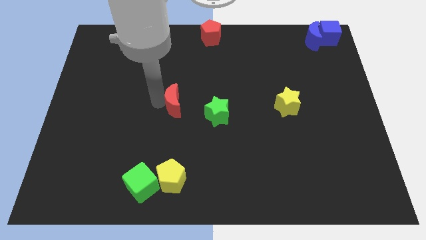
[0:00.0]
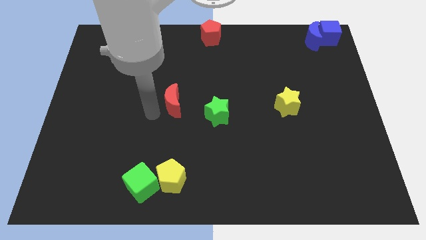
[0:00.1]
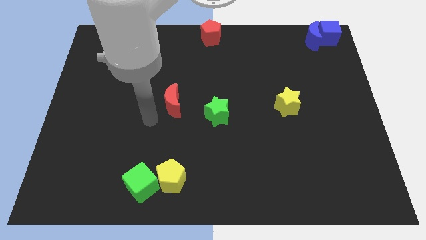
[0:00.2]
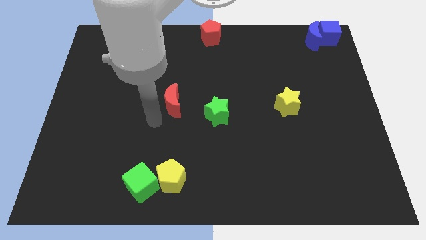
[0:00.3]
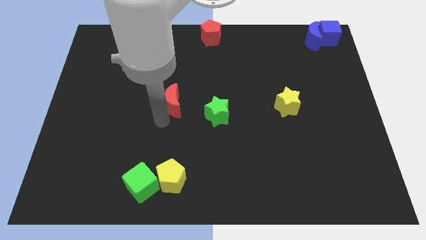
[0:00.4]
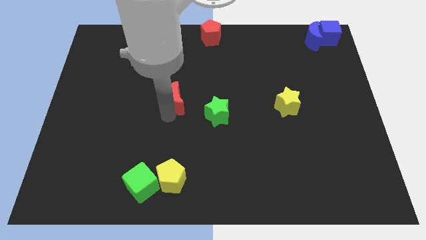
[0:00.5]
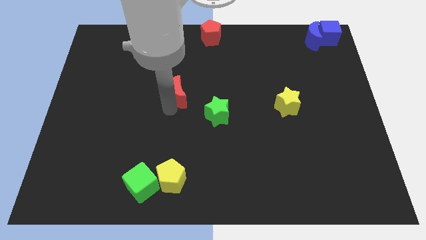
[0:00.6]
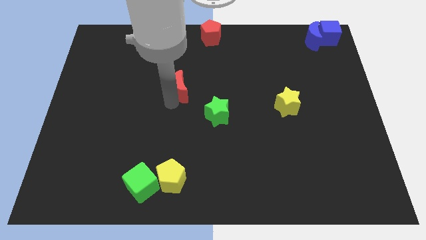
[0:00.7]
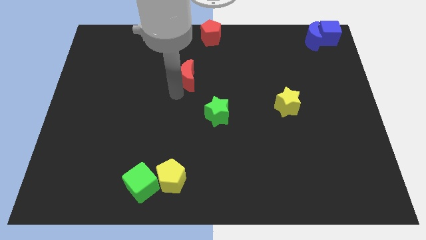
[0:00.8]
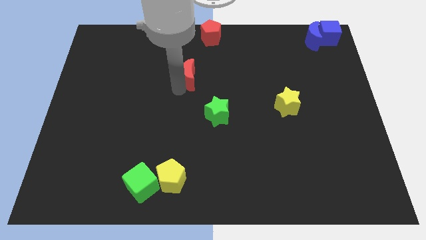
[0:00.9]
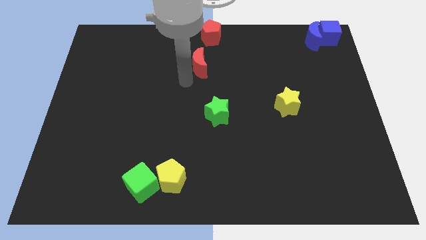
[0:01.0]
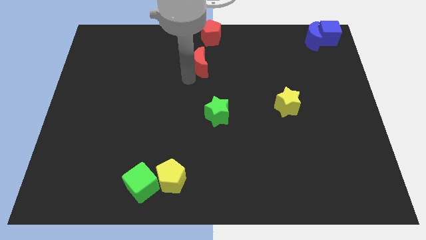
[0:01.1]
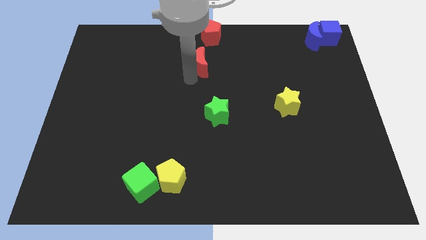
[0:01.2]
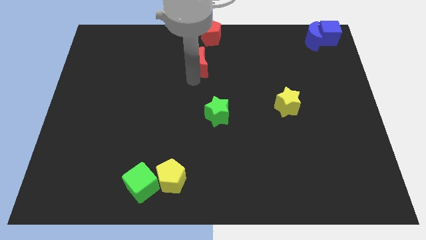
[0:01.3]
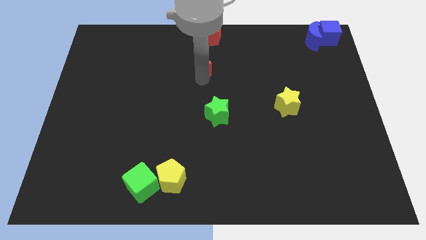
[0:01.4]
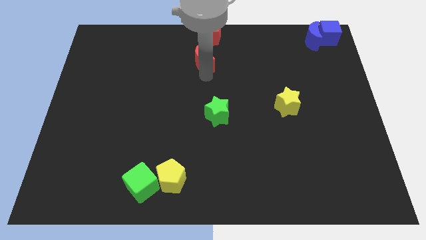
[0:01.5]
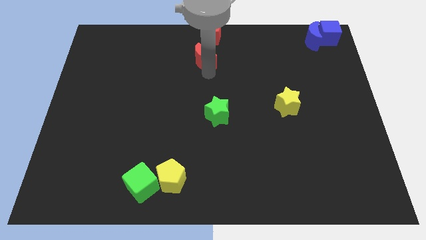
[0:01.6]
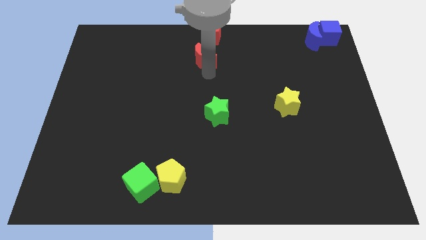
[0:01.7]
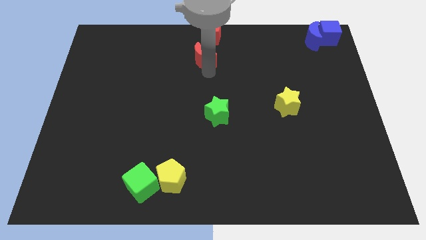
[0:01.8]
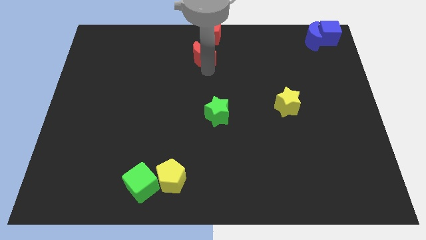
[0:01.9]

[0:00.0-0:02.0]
move the red crescent to the bottom of the red pentagon

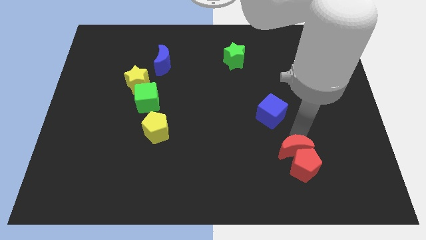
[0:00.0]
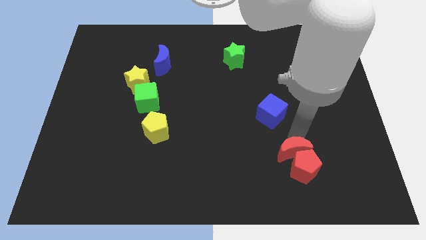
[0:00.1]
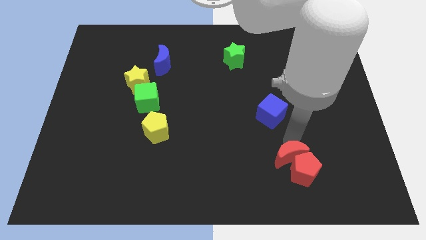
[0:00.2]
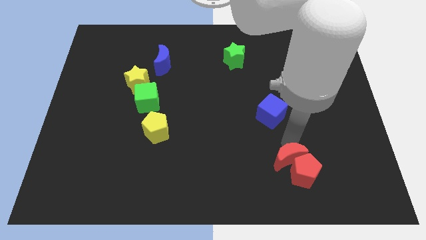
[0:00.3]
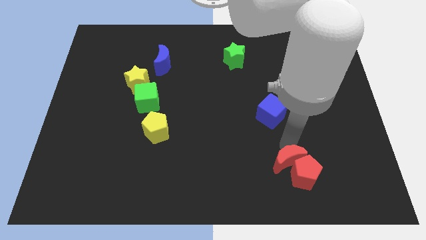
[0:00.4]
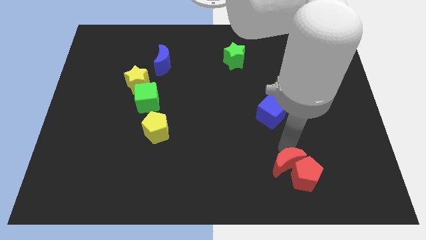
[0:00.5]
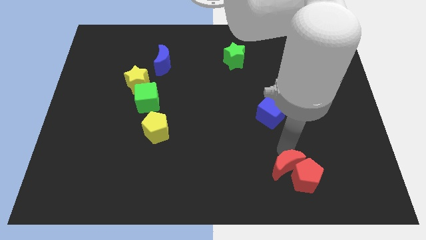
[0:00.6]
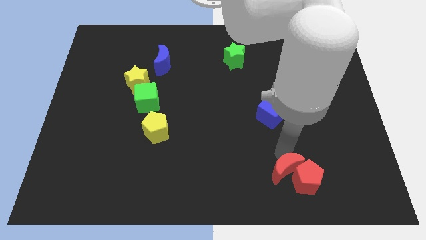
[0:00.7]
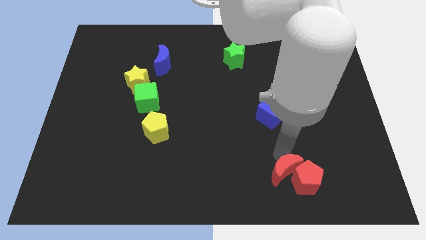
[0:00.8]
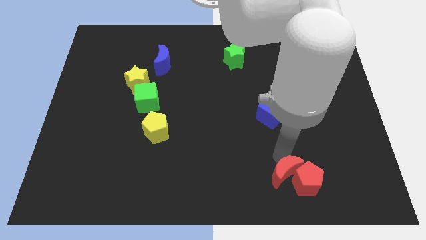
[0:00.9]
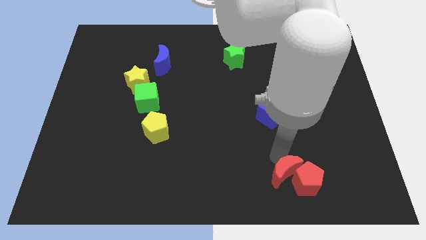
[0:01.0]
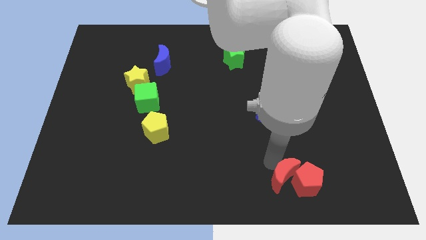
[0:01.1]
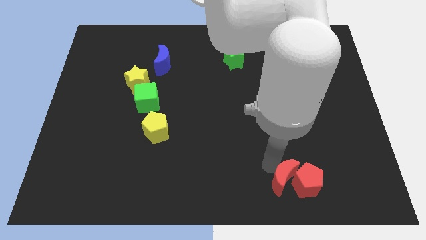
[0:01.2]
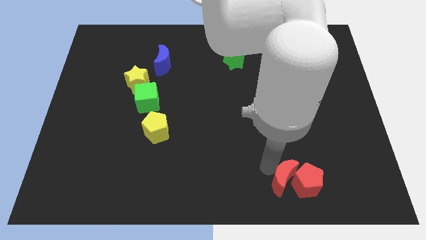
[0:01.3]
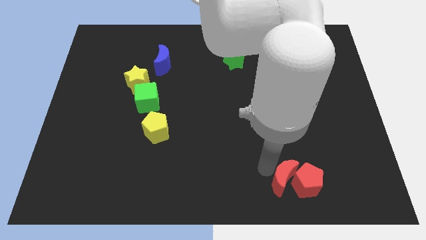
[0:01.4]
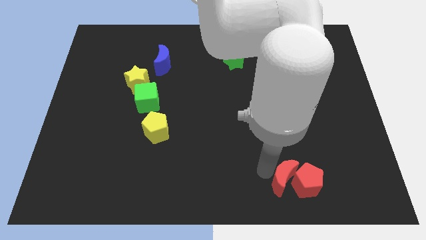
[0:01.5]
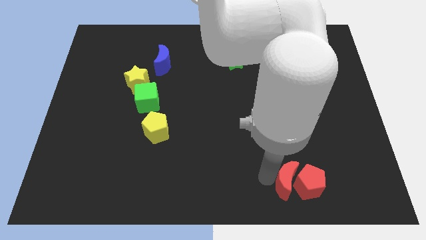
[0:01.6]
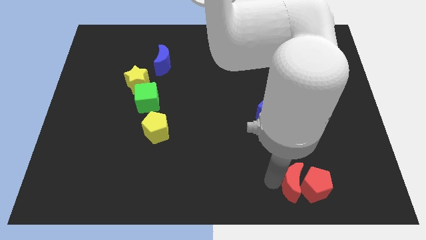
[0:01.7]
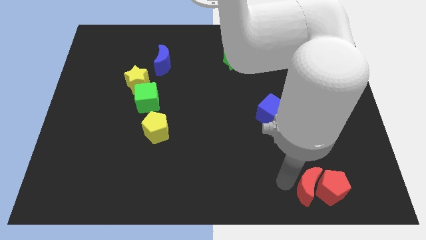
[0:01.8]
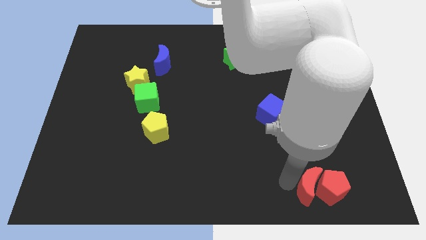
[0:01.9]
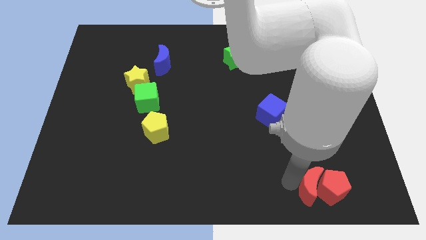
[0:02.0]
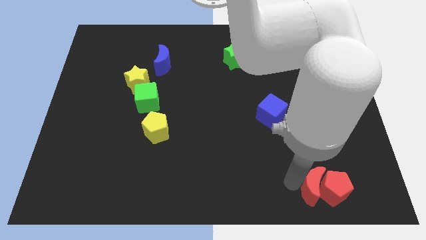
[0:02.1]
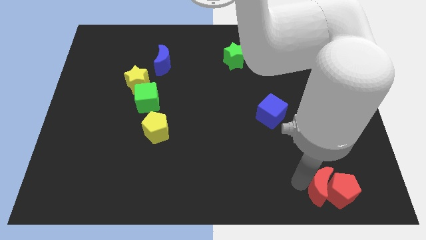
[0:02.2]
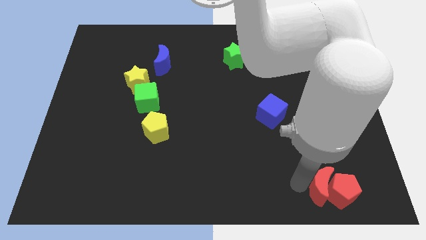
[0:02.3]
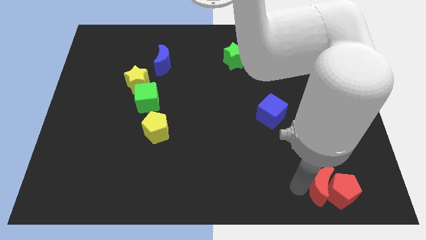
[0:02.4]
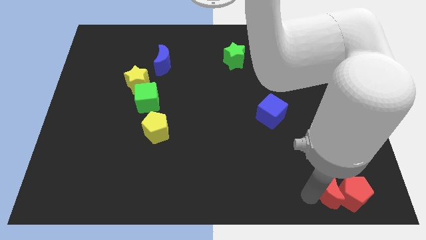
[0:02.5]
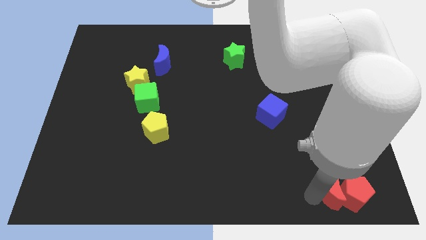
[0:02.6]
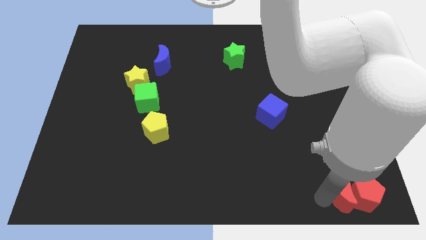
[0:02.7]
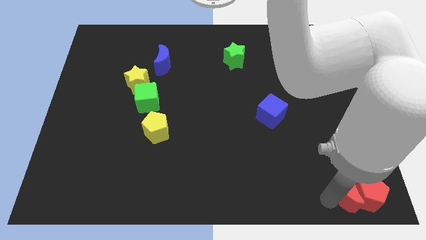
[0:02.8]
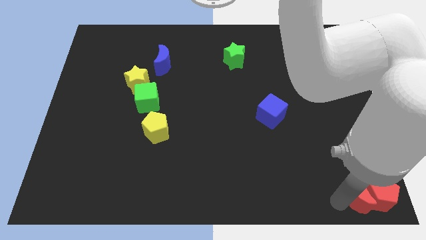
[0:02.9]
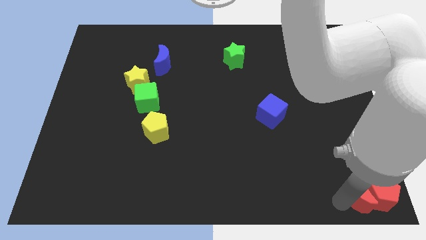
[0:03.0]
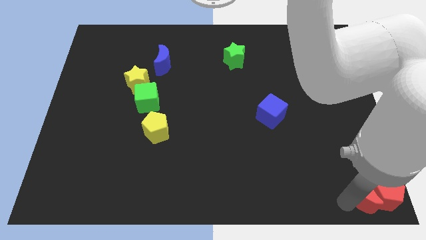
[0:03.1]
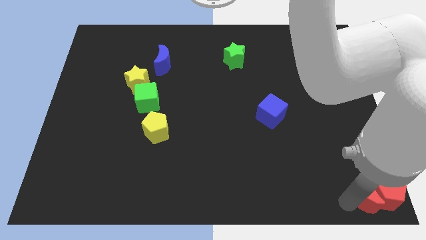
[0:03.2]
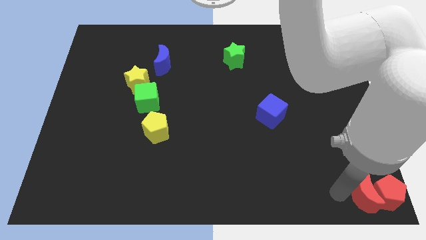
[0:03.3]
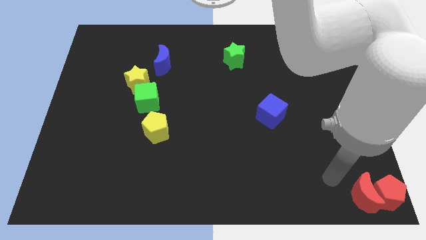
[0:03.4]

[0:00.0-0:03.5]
place the red blocks at the bottom right side of the table

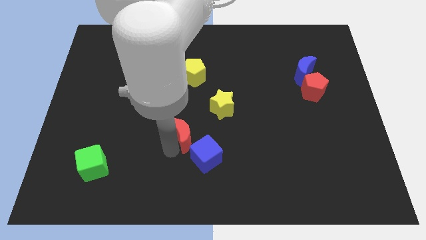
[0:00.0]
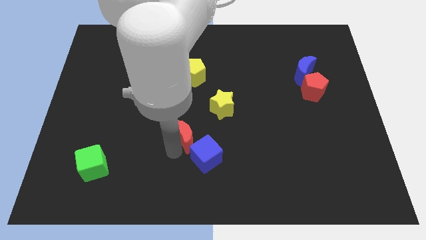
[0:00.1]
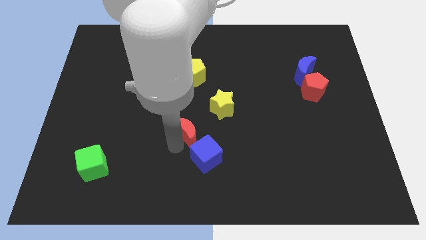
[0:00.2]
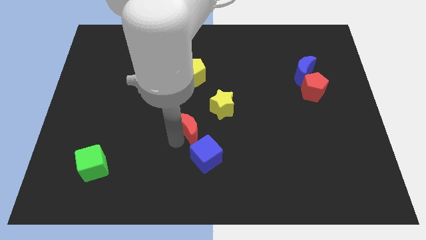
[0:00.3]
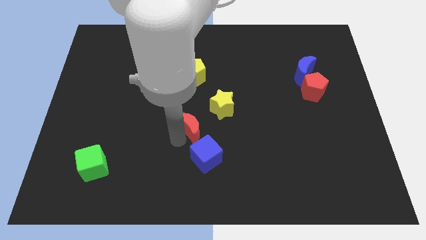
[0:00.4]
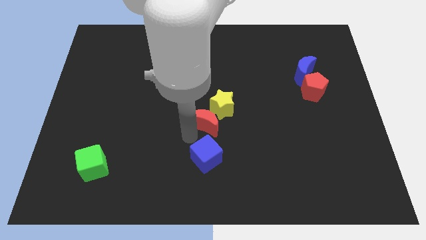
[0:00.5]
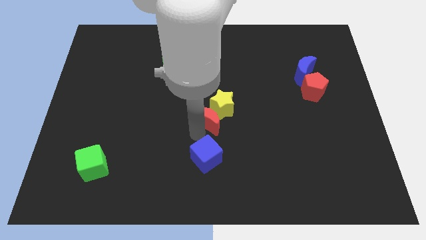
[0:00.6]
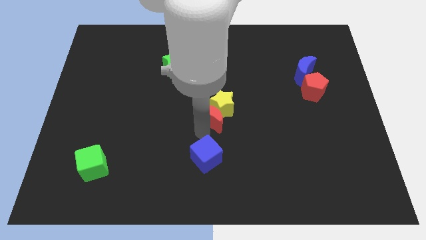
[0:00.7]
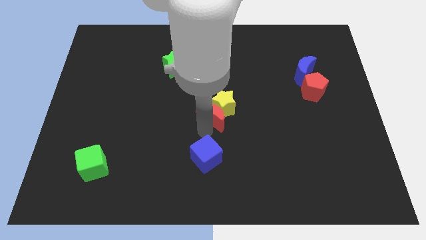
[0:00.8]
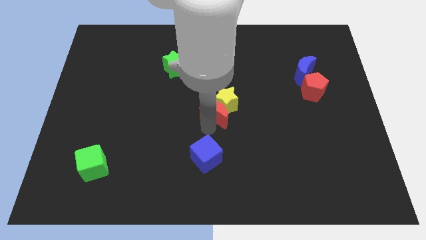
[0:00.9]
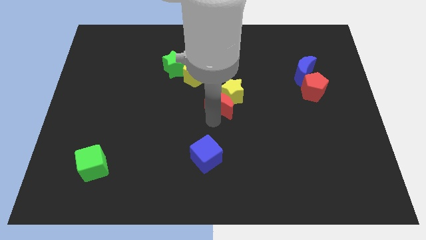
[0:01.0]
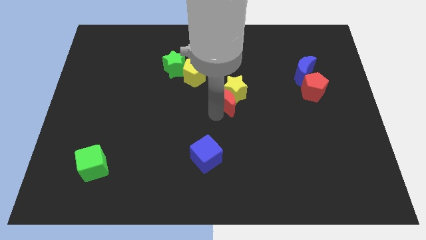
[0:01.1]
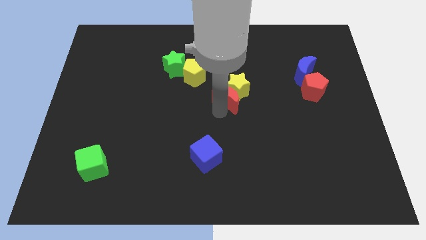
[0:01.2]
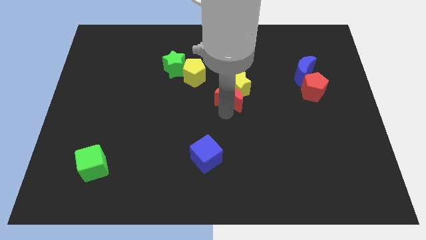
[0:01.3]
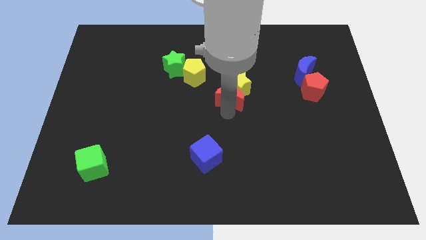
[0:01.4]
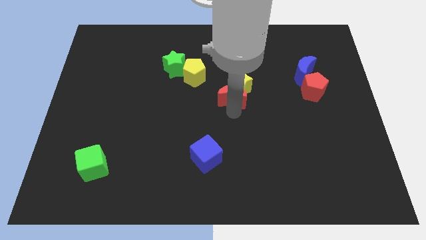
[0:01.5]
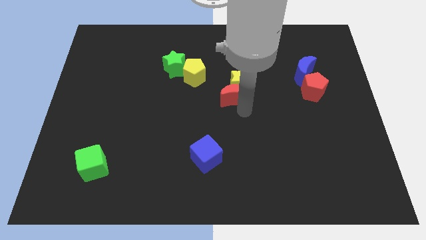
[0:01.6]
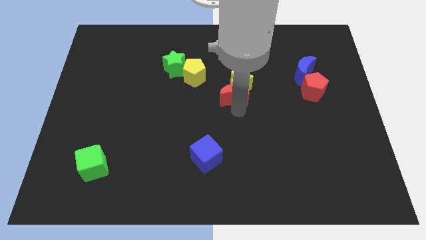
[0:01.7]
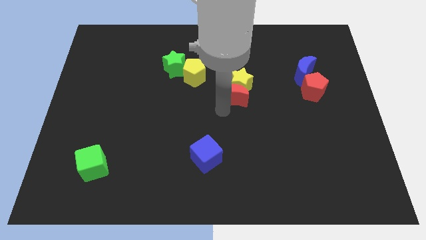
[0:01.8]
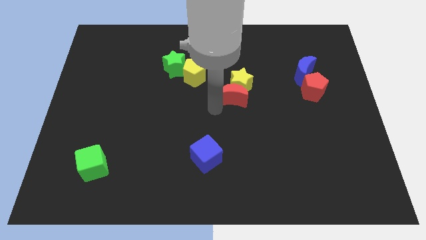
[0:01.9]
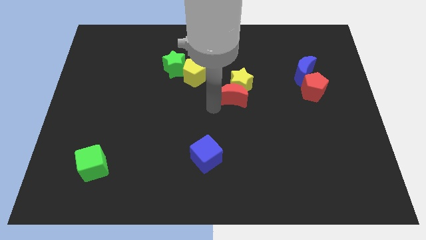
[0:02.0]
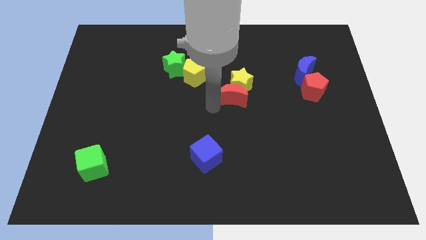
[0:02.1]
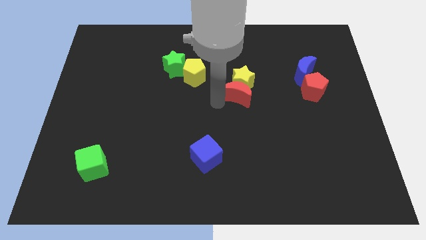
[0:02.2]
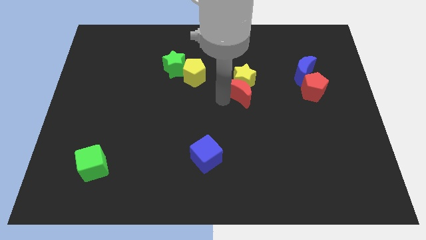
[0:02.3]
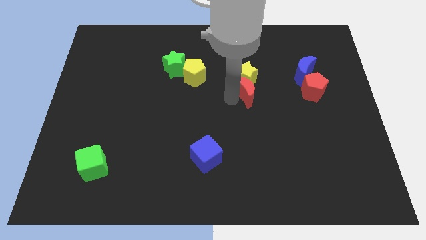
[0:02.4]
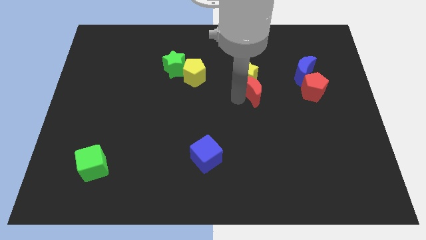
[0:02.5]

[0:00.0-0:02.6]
move the red moon and yellow star slightly up

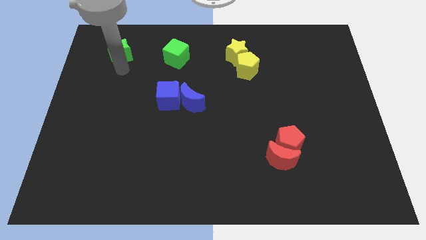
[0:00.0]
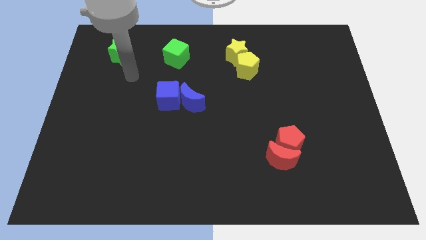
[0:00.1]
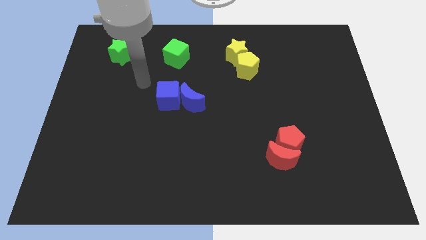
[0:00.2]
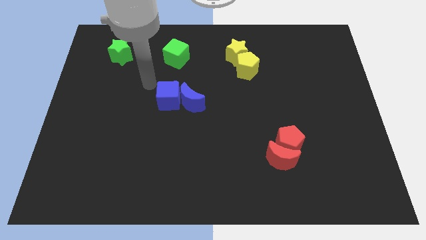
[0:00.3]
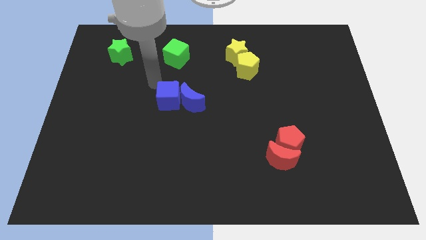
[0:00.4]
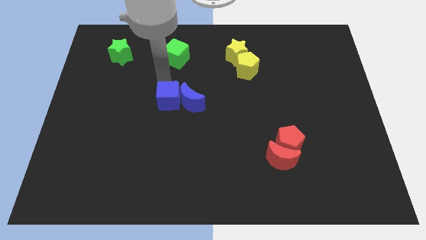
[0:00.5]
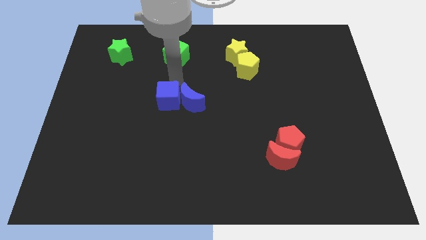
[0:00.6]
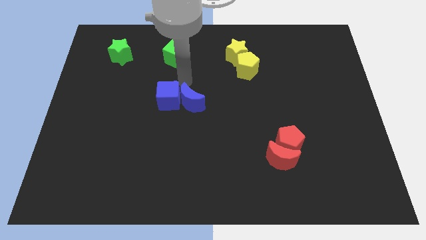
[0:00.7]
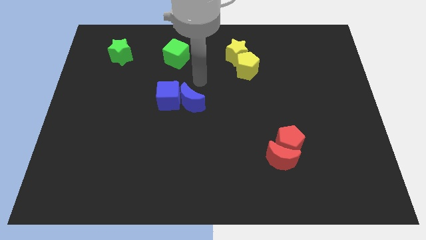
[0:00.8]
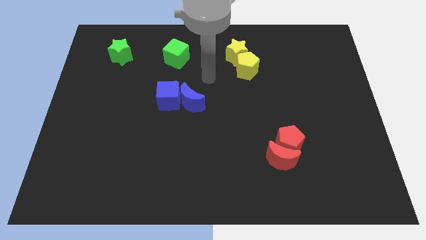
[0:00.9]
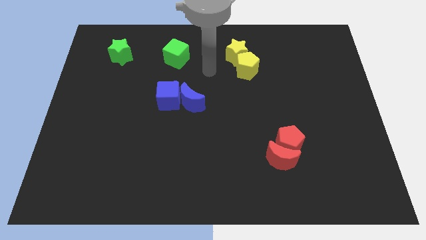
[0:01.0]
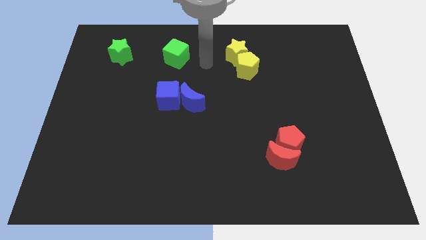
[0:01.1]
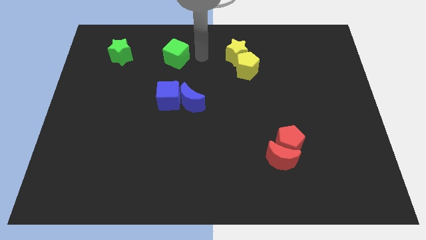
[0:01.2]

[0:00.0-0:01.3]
point your arm right to green cube
